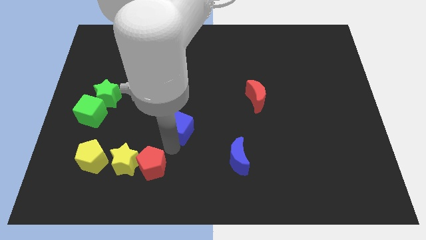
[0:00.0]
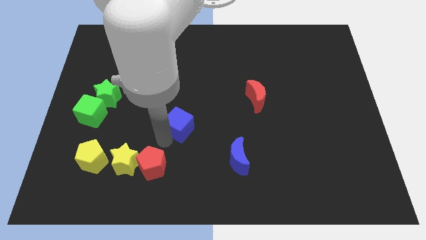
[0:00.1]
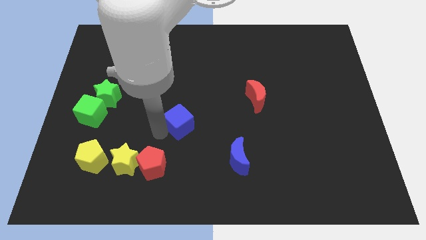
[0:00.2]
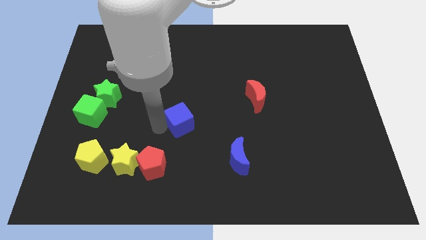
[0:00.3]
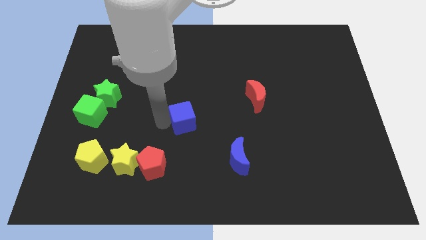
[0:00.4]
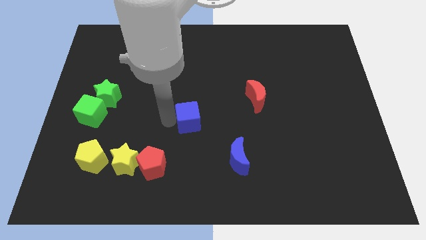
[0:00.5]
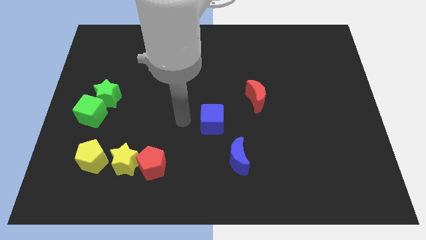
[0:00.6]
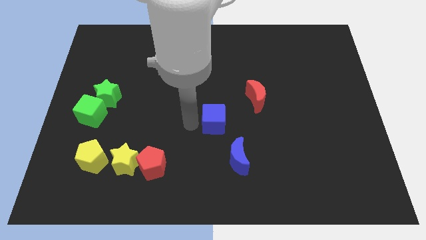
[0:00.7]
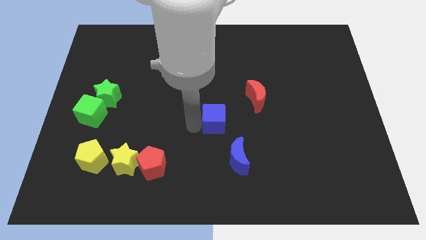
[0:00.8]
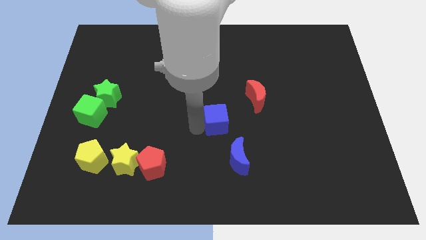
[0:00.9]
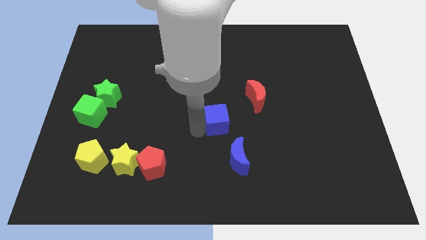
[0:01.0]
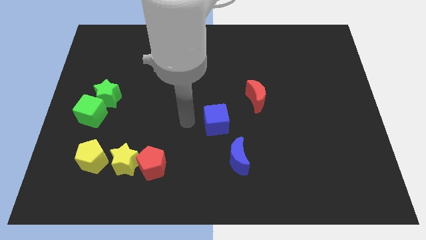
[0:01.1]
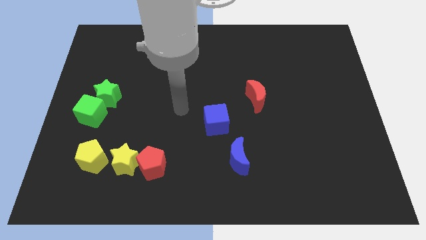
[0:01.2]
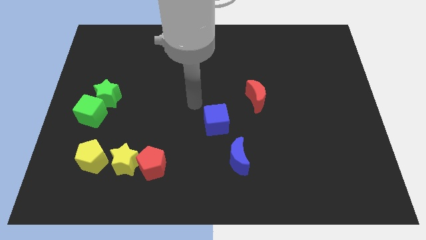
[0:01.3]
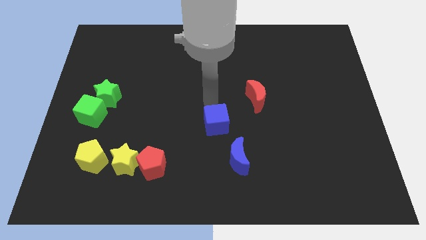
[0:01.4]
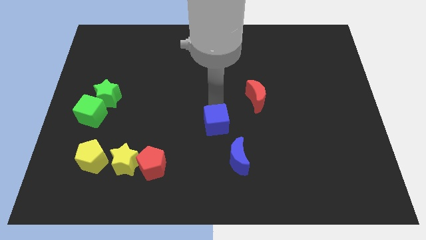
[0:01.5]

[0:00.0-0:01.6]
move the blue cube to the left top of the blue crescent

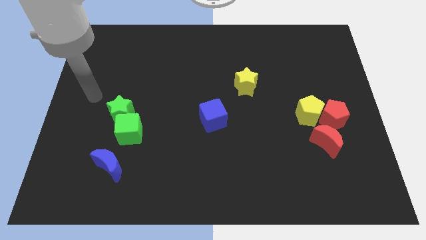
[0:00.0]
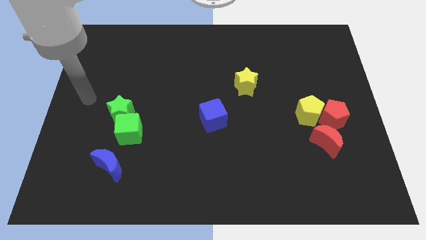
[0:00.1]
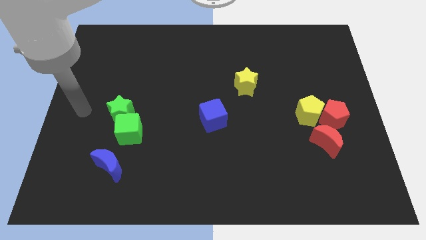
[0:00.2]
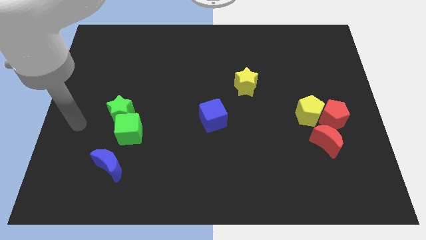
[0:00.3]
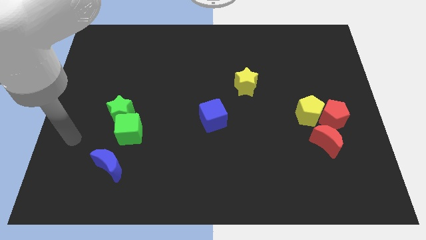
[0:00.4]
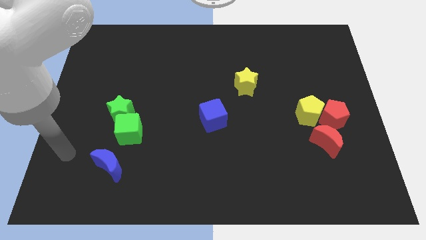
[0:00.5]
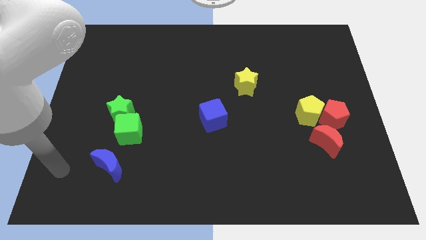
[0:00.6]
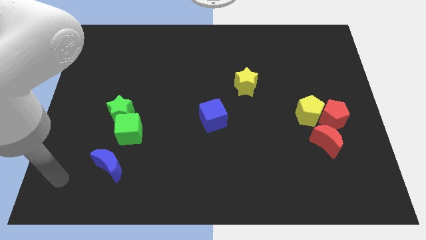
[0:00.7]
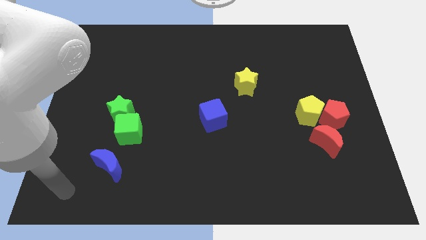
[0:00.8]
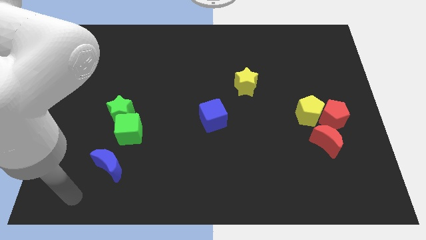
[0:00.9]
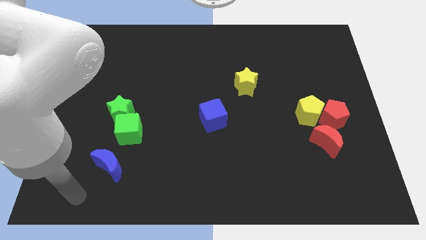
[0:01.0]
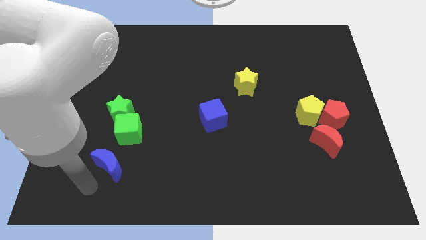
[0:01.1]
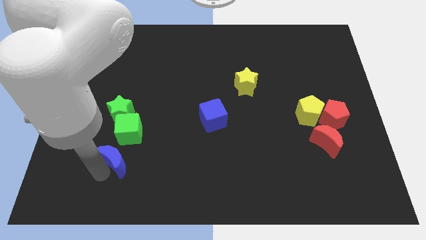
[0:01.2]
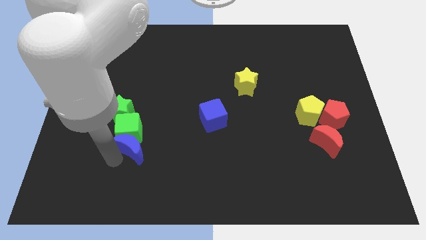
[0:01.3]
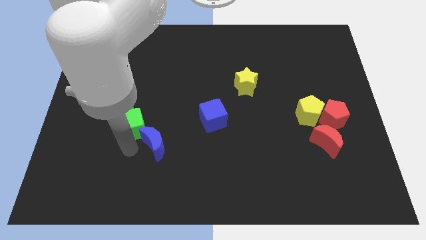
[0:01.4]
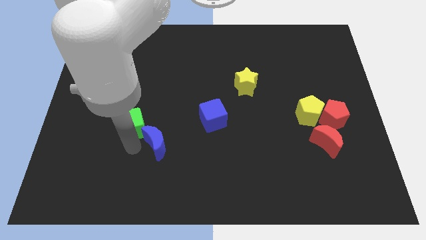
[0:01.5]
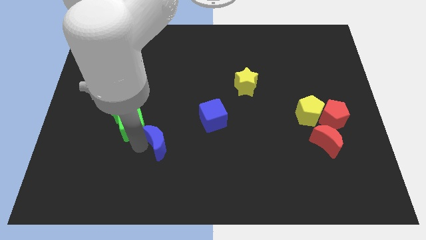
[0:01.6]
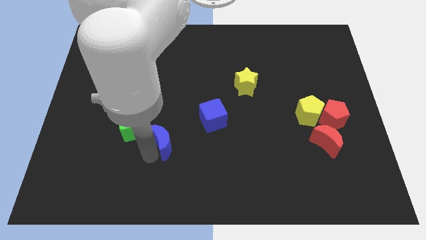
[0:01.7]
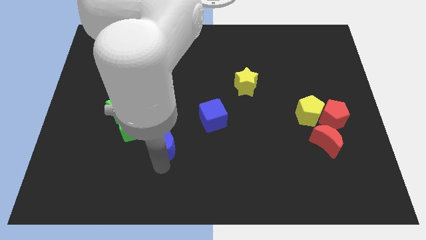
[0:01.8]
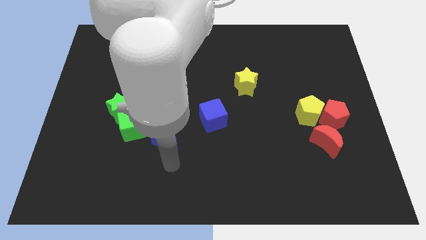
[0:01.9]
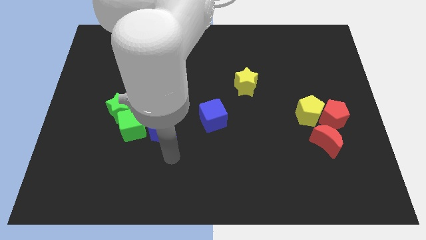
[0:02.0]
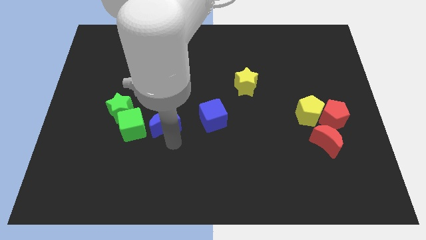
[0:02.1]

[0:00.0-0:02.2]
place the red moon right side of the green cube

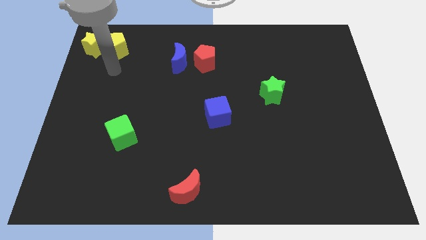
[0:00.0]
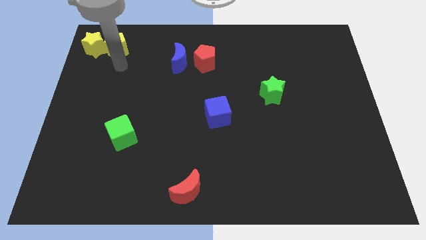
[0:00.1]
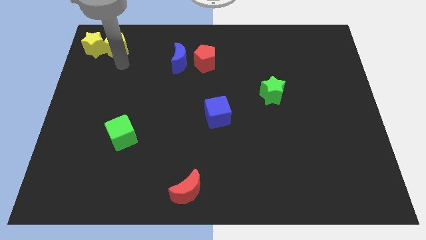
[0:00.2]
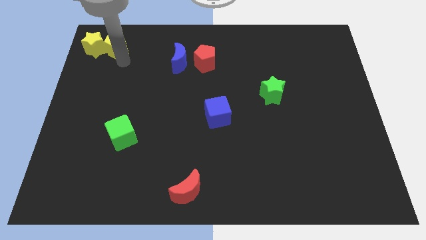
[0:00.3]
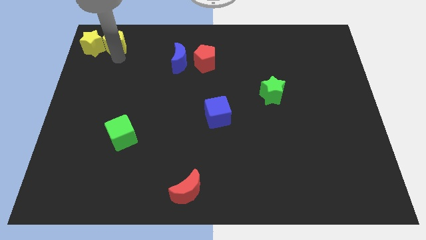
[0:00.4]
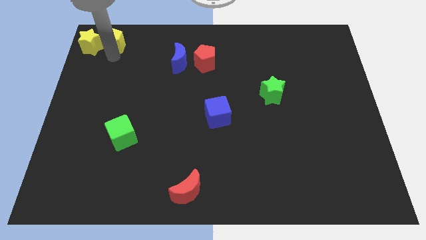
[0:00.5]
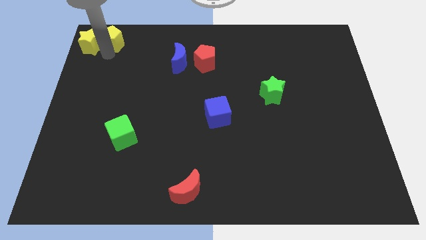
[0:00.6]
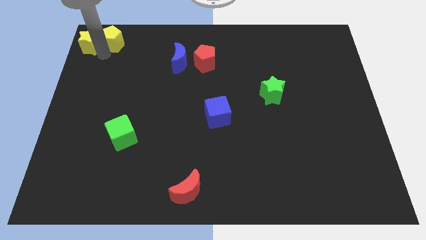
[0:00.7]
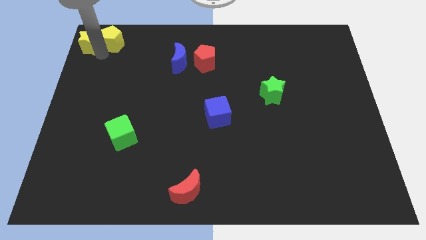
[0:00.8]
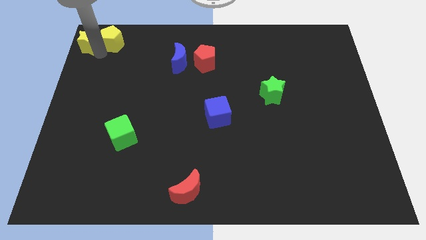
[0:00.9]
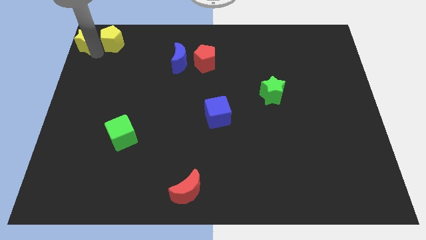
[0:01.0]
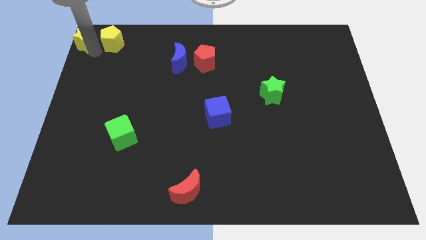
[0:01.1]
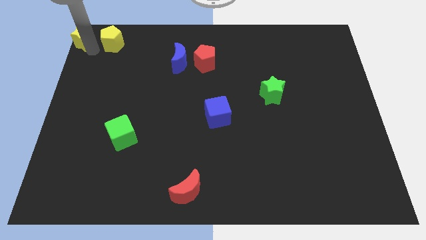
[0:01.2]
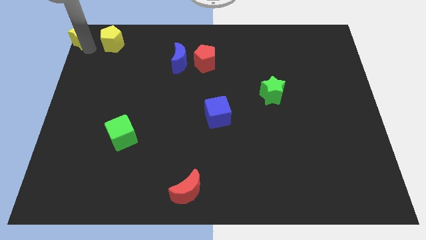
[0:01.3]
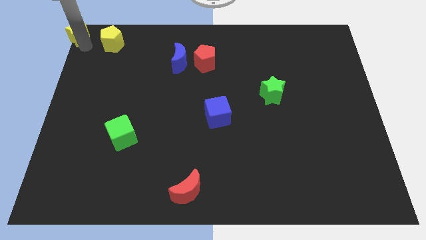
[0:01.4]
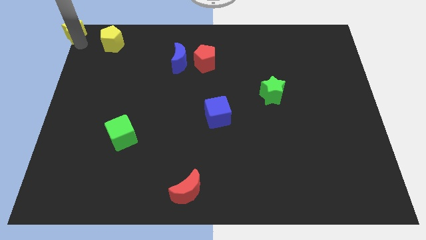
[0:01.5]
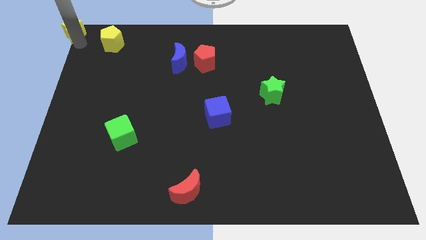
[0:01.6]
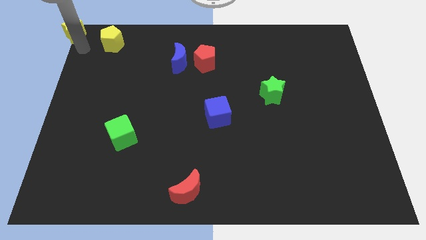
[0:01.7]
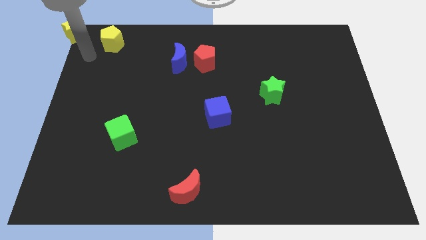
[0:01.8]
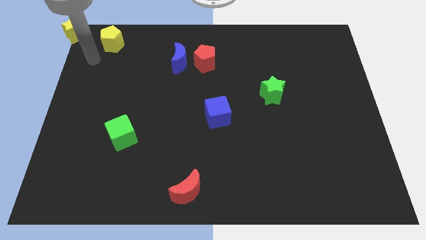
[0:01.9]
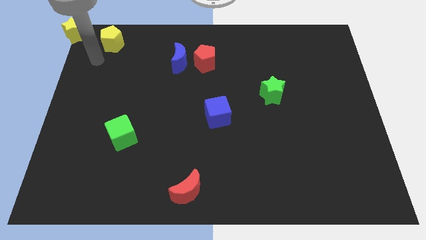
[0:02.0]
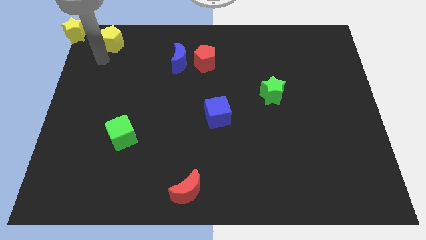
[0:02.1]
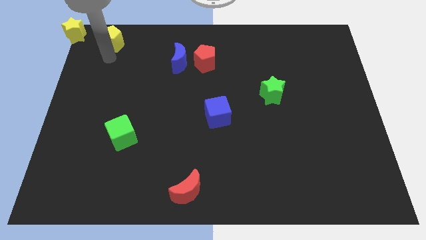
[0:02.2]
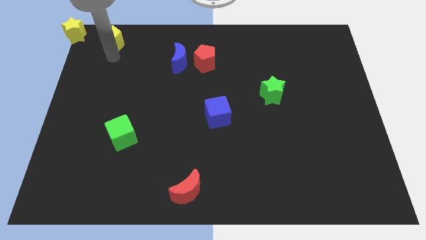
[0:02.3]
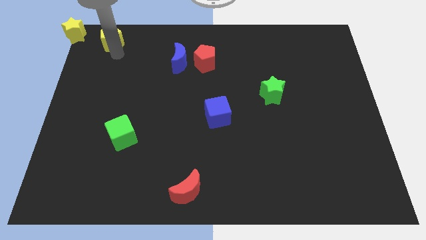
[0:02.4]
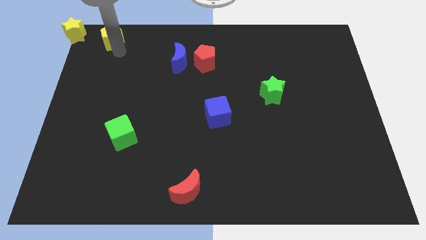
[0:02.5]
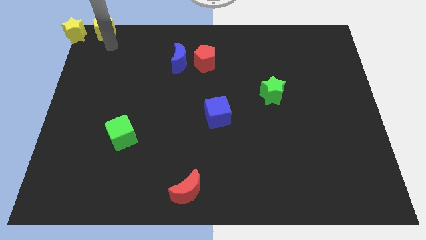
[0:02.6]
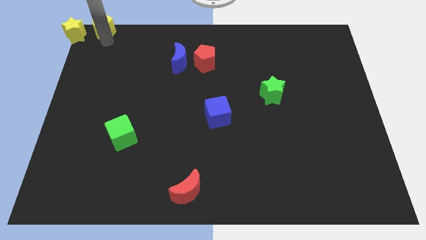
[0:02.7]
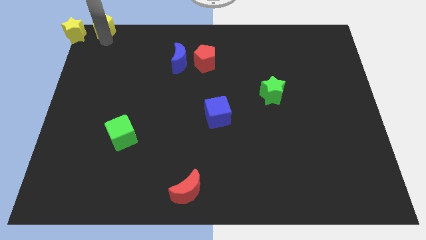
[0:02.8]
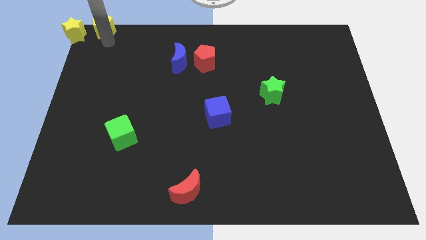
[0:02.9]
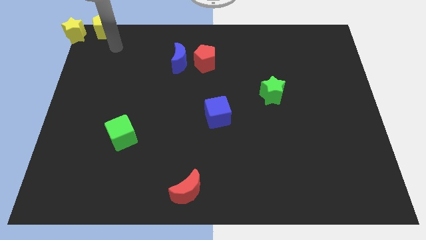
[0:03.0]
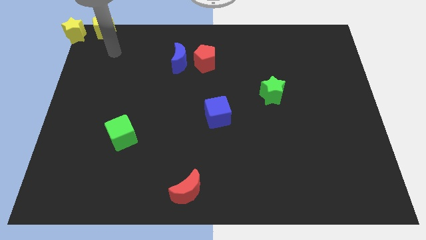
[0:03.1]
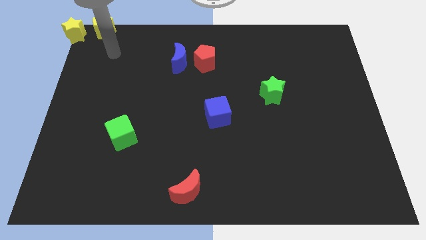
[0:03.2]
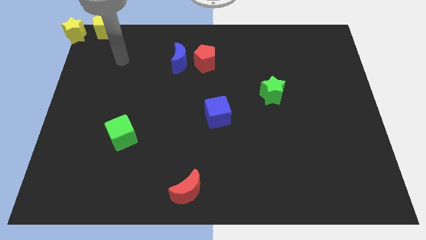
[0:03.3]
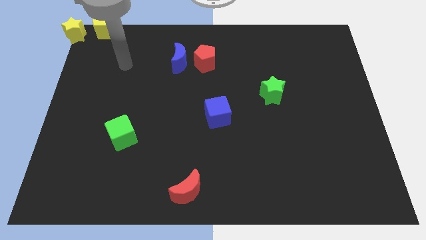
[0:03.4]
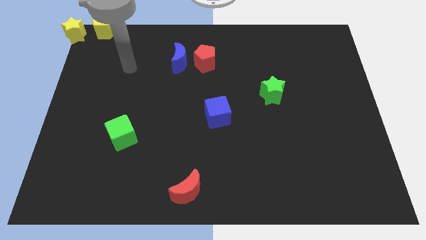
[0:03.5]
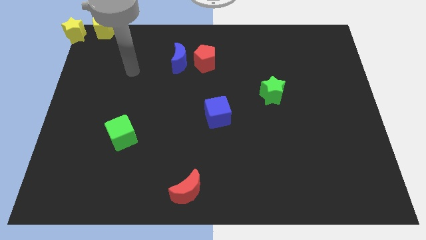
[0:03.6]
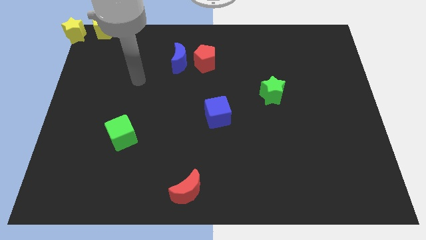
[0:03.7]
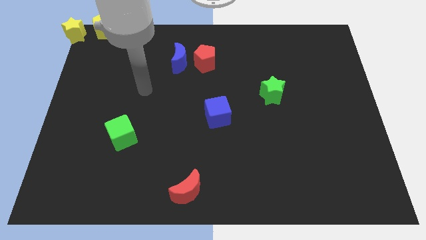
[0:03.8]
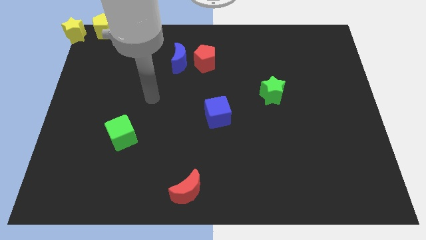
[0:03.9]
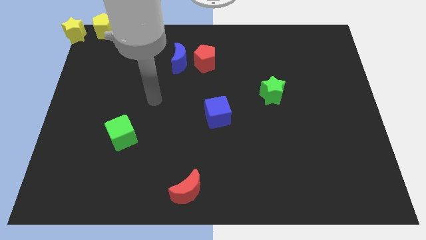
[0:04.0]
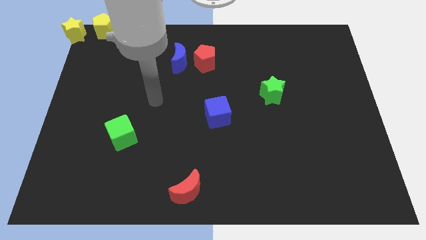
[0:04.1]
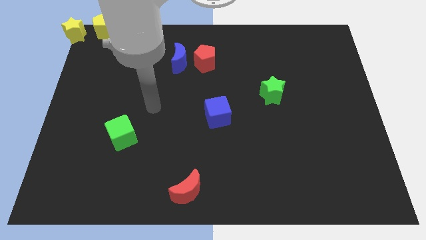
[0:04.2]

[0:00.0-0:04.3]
move yellow blocks to the top left corner

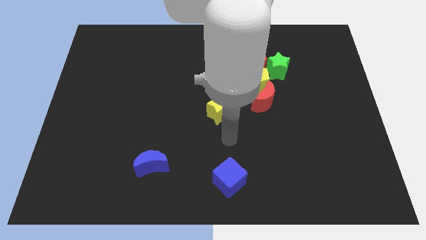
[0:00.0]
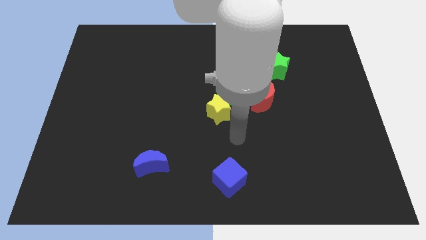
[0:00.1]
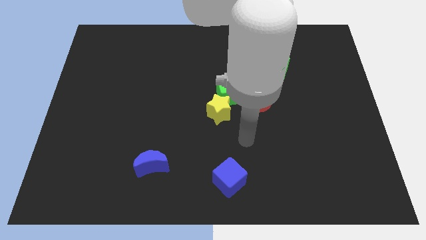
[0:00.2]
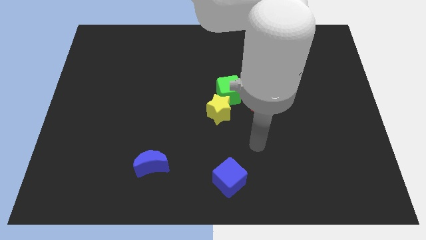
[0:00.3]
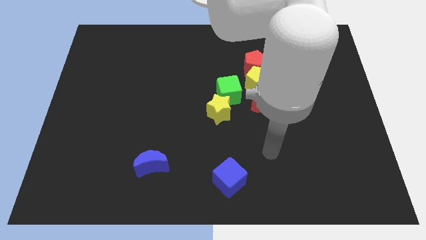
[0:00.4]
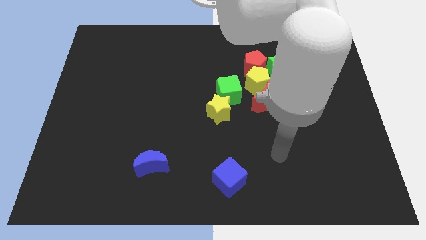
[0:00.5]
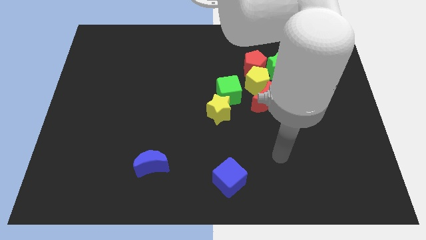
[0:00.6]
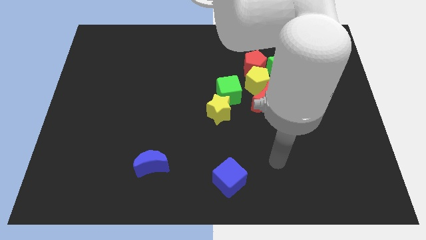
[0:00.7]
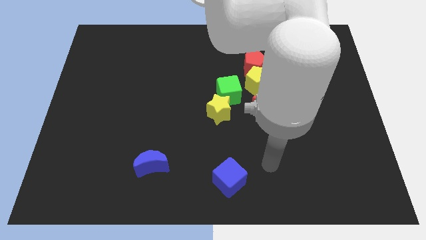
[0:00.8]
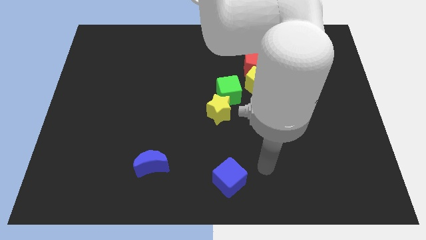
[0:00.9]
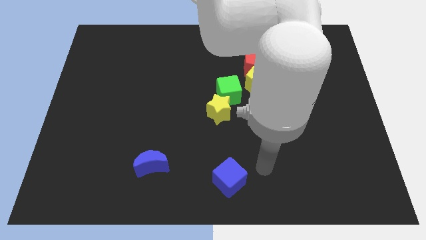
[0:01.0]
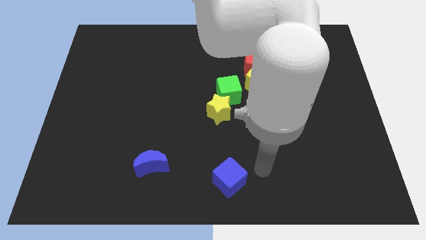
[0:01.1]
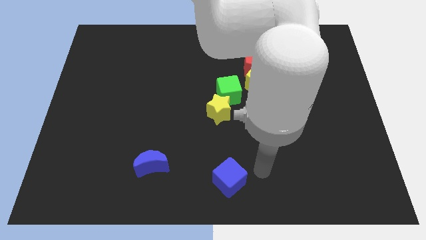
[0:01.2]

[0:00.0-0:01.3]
move the arm to the right side of the blue cube
